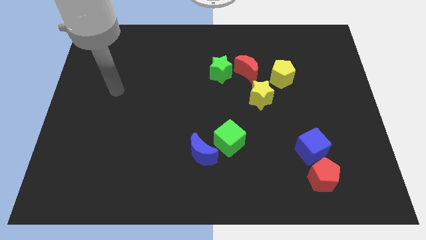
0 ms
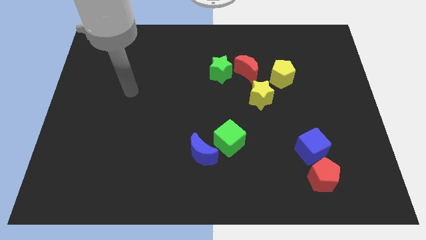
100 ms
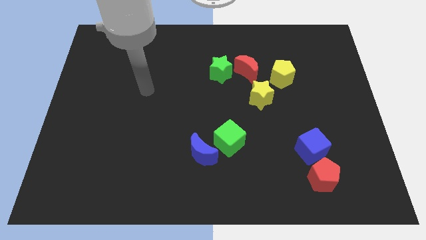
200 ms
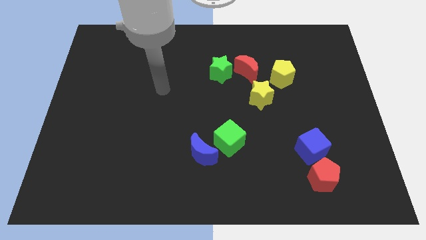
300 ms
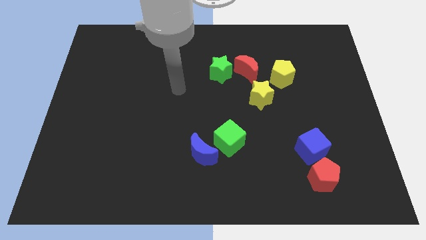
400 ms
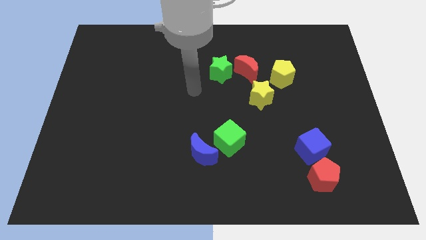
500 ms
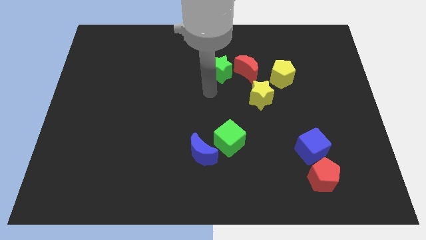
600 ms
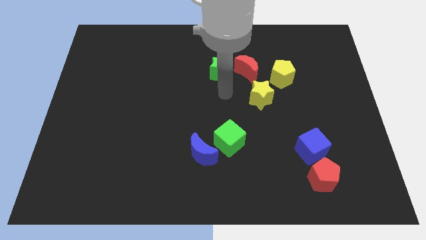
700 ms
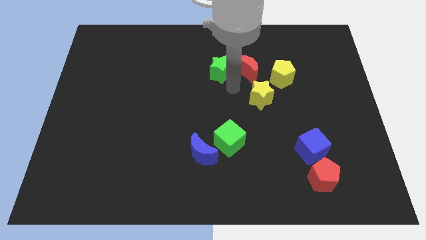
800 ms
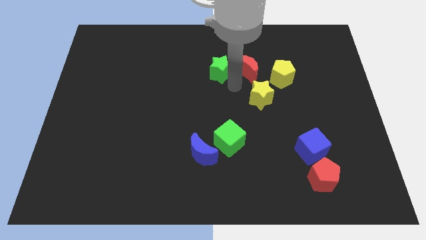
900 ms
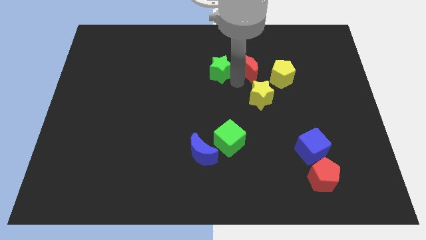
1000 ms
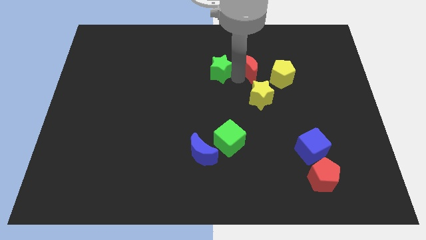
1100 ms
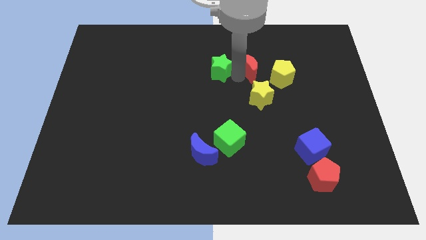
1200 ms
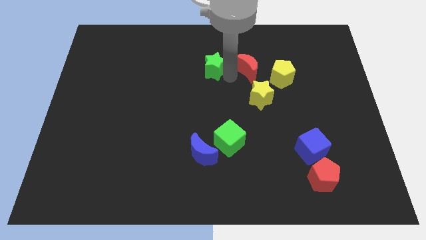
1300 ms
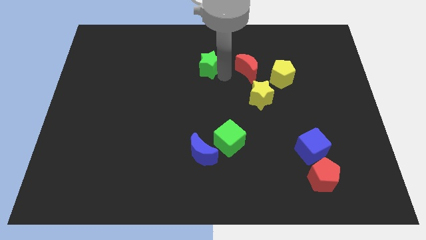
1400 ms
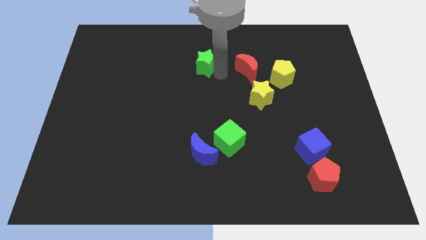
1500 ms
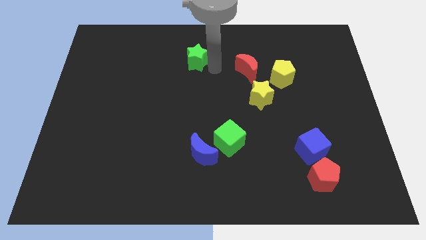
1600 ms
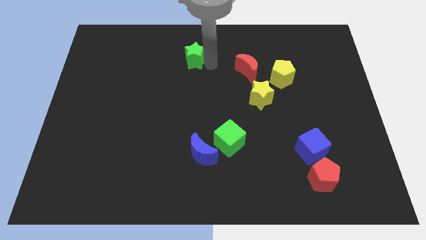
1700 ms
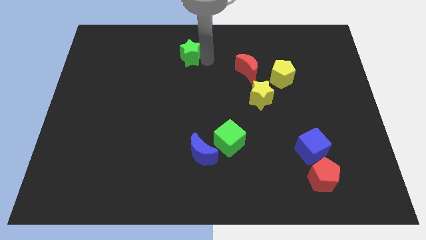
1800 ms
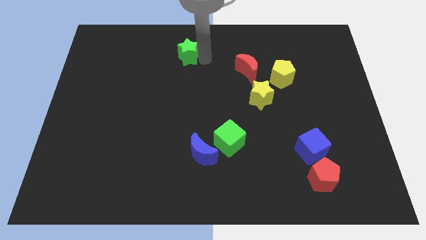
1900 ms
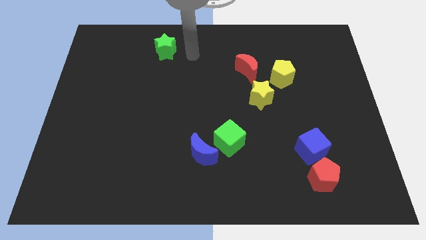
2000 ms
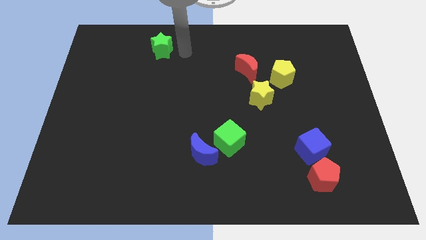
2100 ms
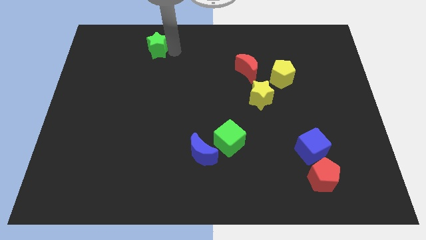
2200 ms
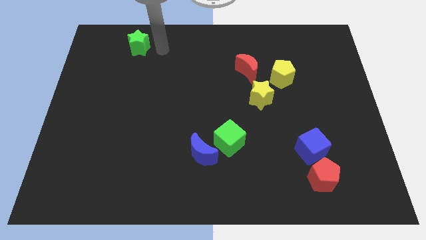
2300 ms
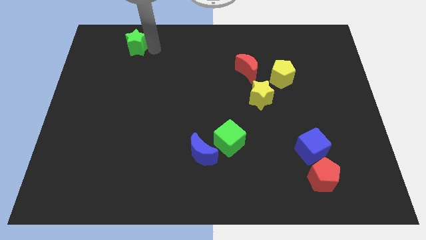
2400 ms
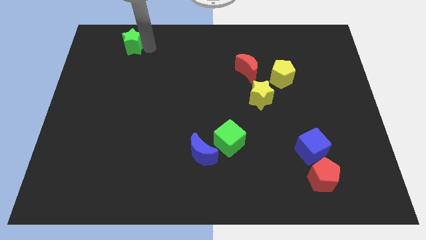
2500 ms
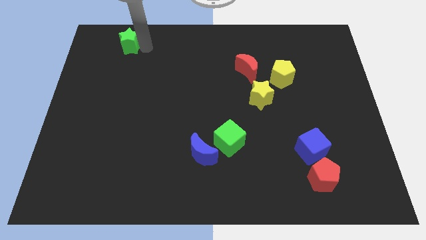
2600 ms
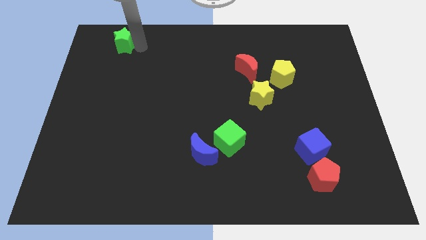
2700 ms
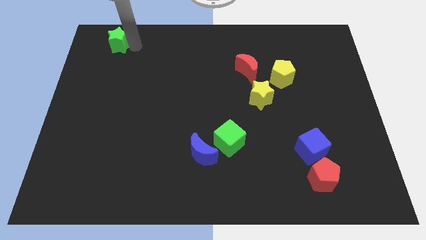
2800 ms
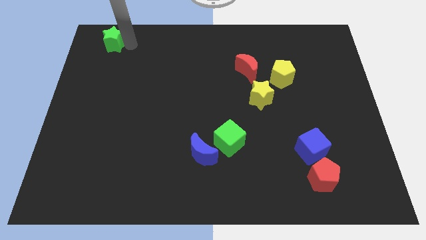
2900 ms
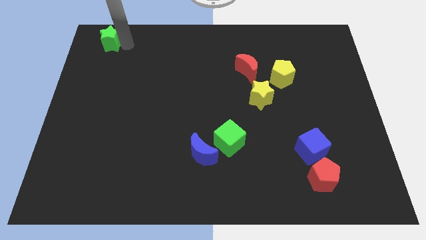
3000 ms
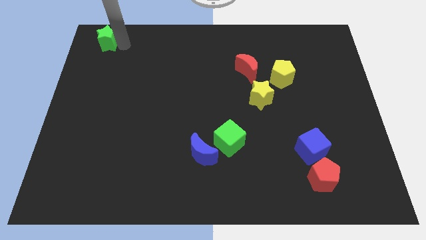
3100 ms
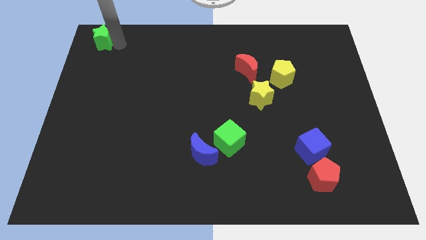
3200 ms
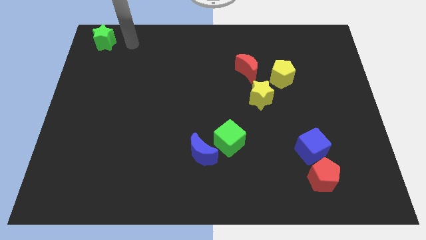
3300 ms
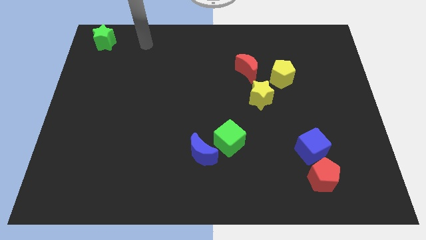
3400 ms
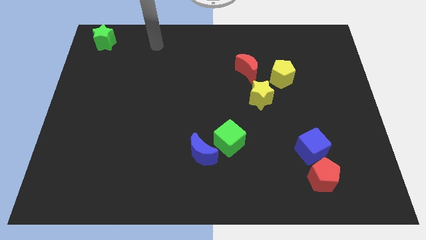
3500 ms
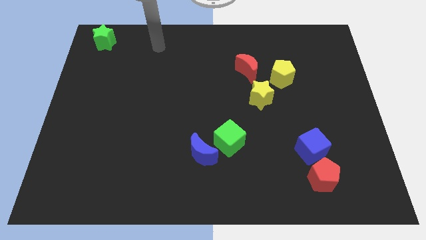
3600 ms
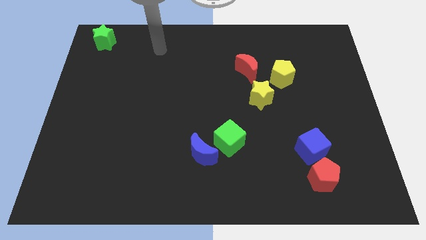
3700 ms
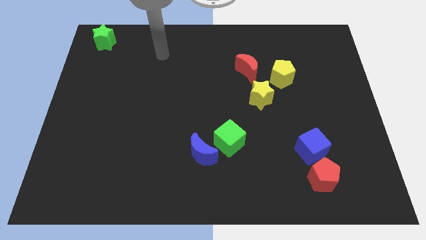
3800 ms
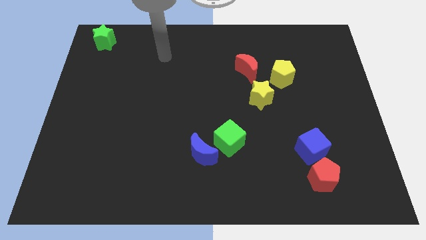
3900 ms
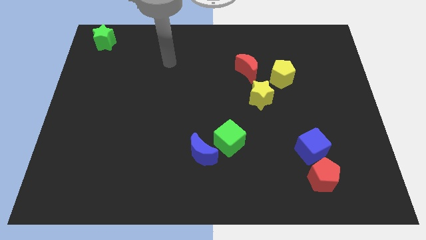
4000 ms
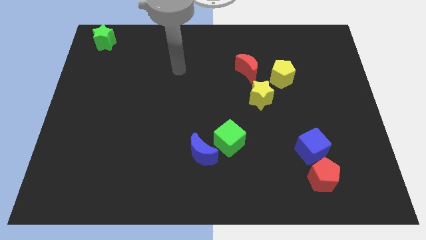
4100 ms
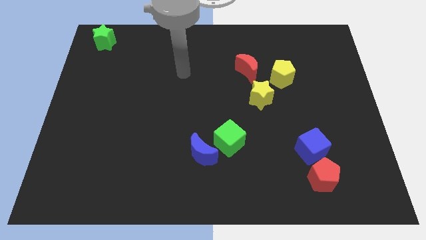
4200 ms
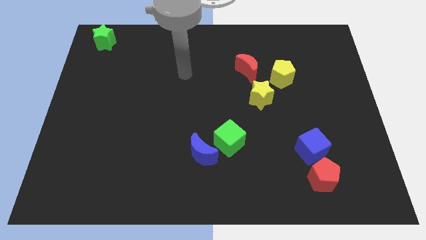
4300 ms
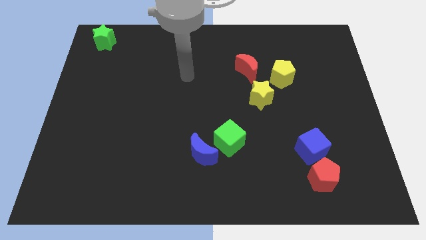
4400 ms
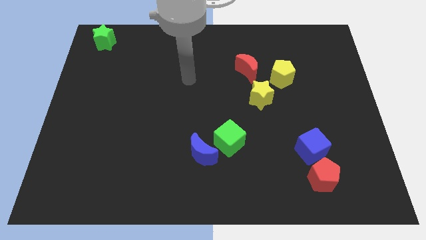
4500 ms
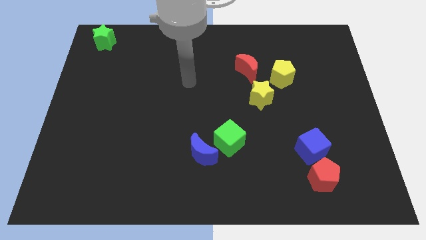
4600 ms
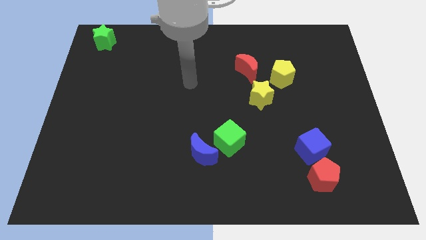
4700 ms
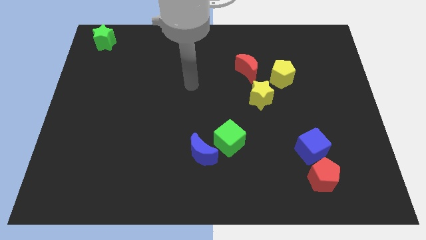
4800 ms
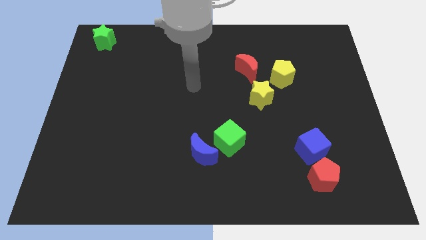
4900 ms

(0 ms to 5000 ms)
push the green star to the top left corner

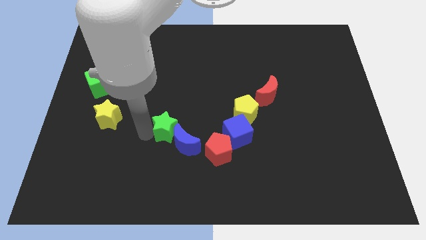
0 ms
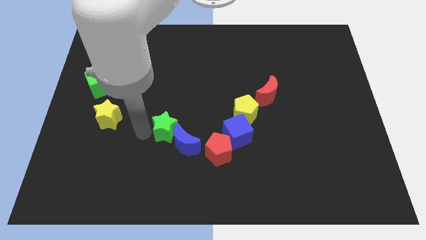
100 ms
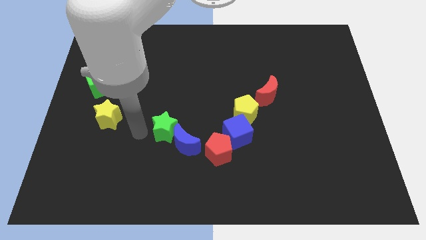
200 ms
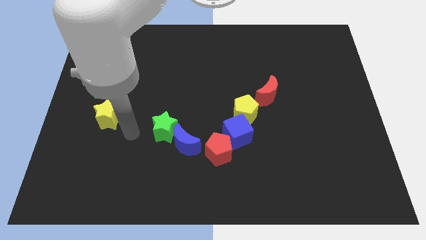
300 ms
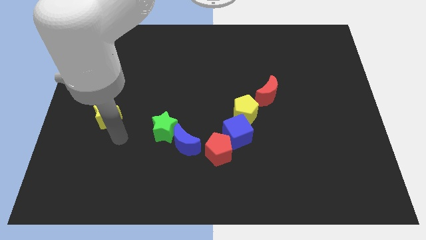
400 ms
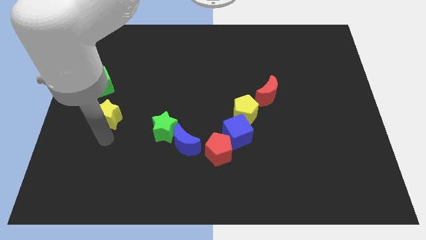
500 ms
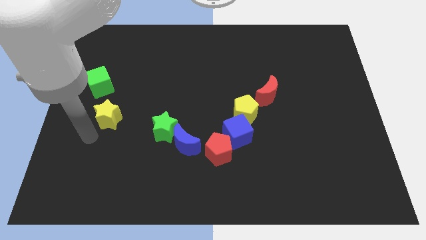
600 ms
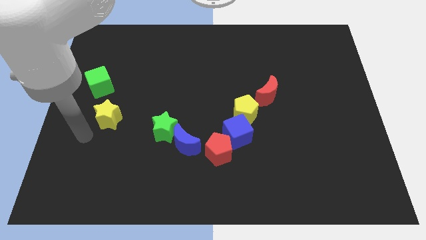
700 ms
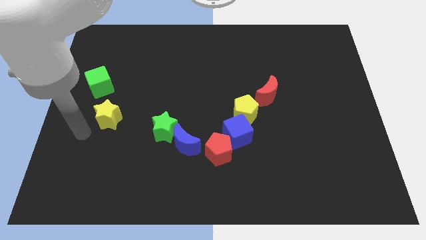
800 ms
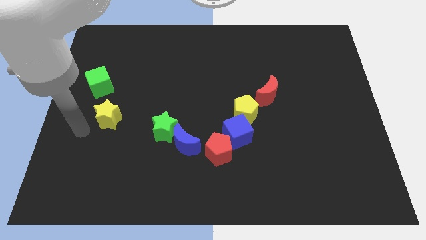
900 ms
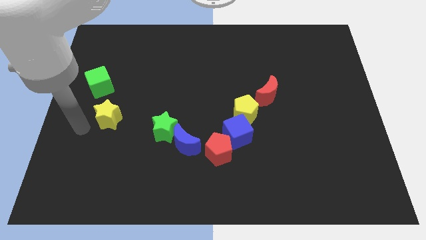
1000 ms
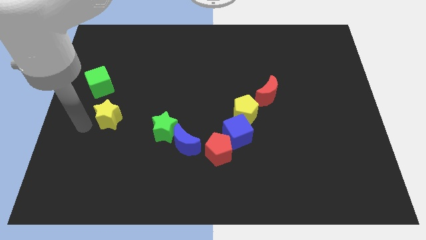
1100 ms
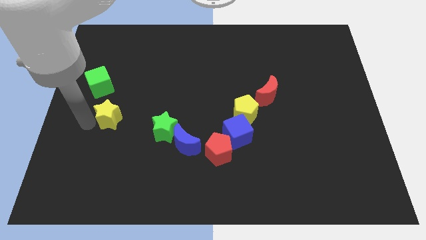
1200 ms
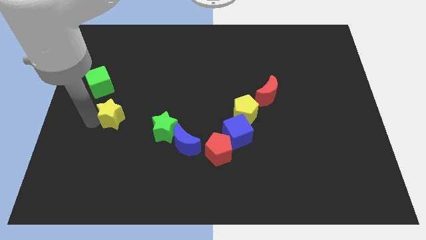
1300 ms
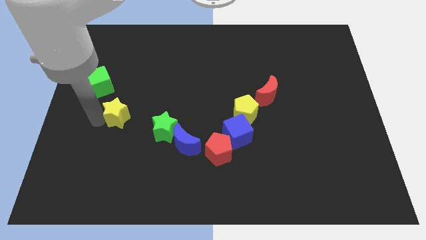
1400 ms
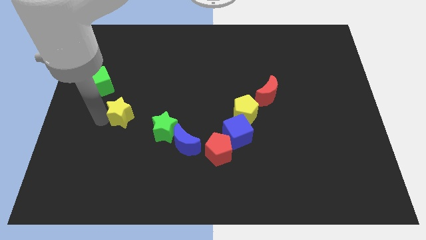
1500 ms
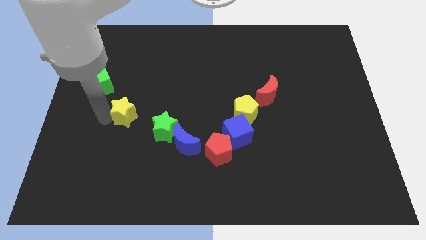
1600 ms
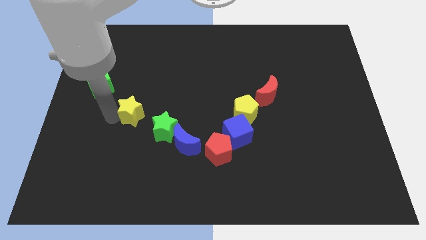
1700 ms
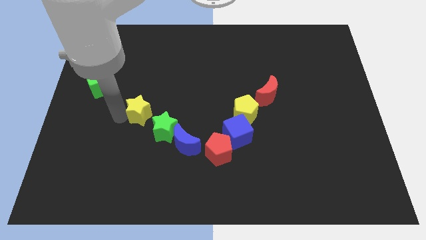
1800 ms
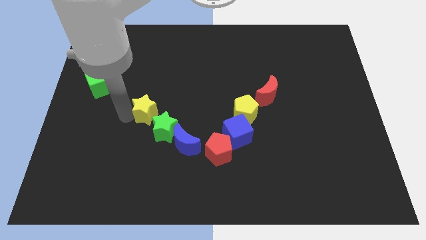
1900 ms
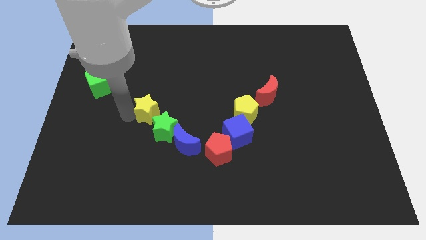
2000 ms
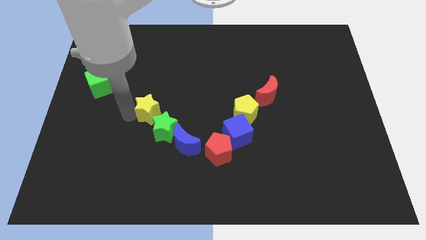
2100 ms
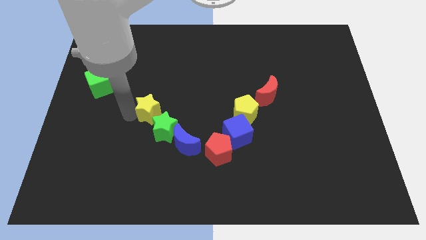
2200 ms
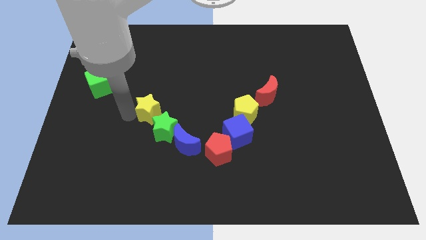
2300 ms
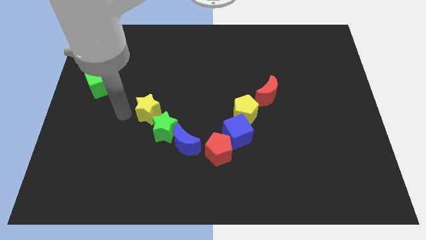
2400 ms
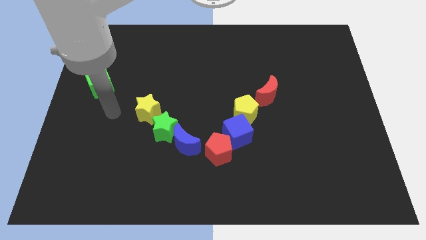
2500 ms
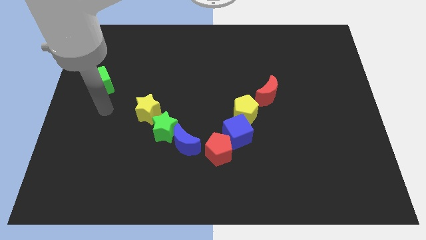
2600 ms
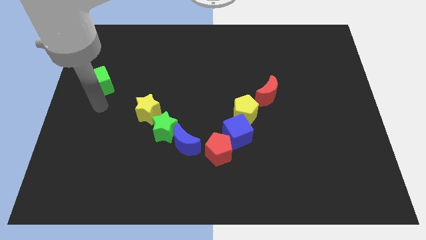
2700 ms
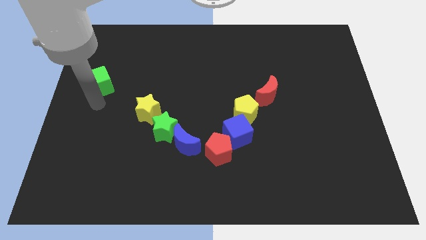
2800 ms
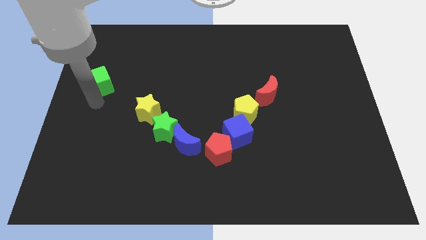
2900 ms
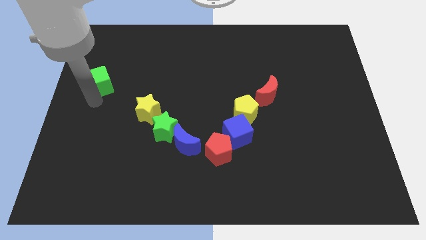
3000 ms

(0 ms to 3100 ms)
place the yellow star to the left of green star
